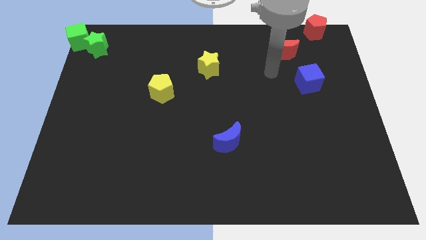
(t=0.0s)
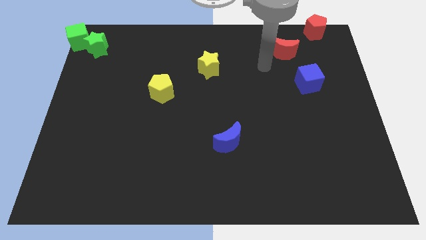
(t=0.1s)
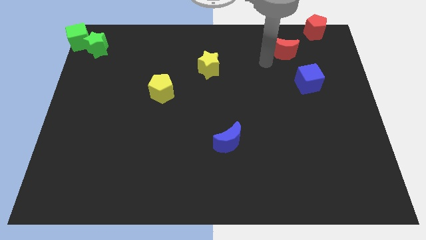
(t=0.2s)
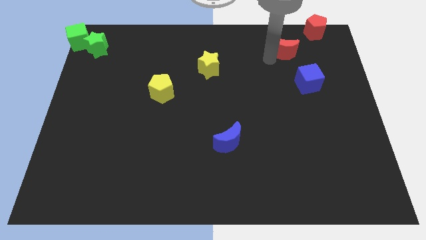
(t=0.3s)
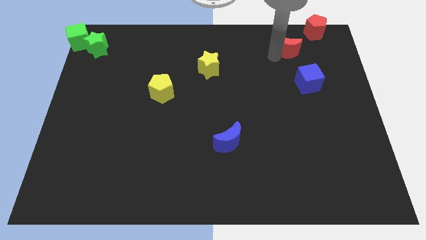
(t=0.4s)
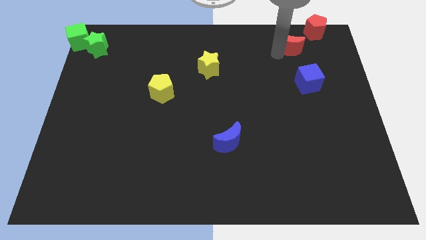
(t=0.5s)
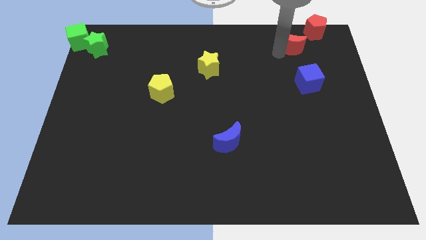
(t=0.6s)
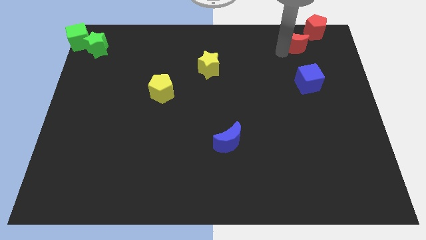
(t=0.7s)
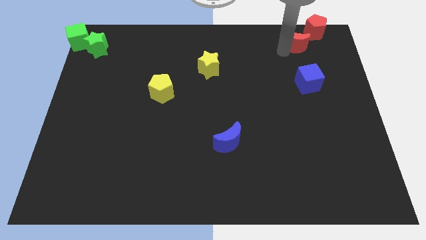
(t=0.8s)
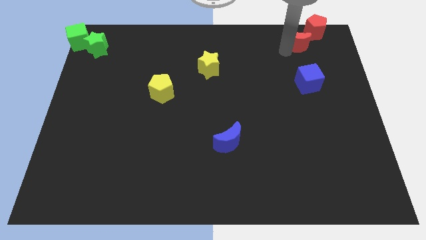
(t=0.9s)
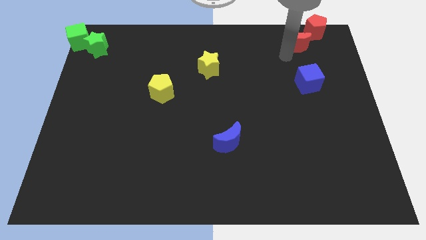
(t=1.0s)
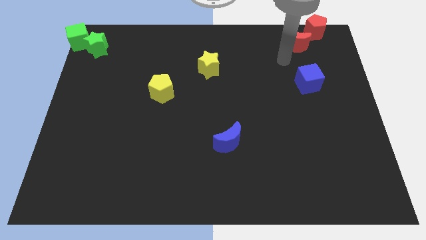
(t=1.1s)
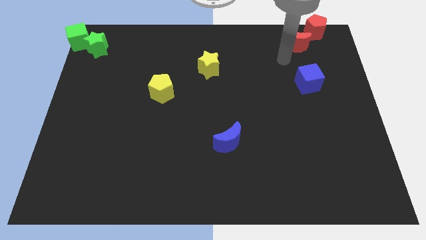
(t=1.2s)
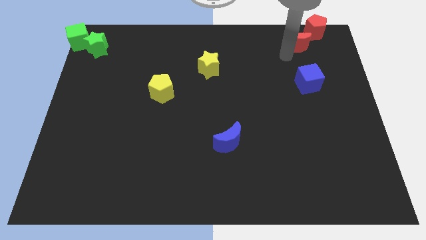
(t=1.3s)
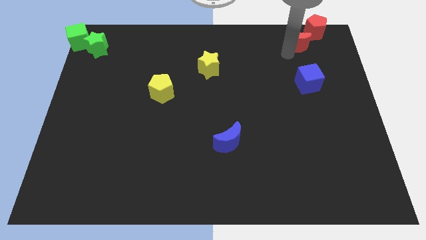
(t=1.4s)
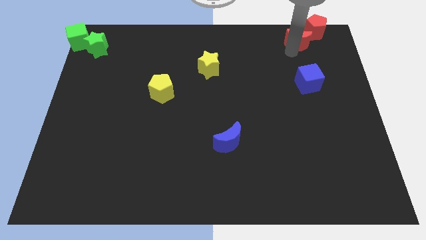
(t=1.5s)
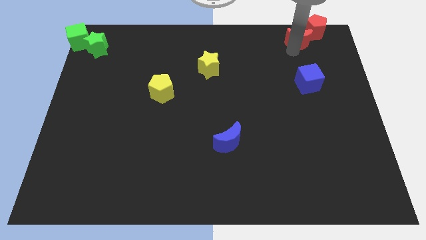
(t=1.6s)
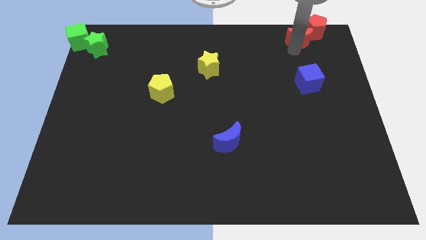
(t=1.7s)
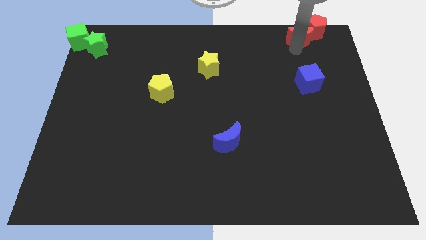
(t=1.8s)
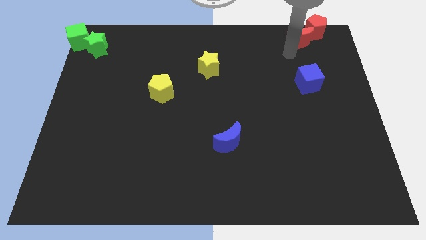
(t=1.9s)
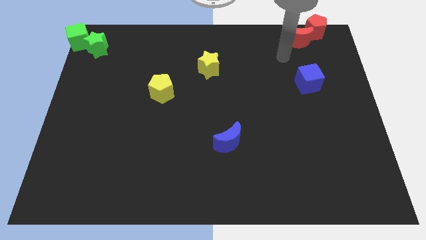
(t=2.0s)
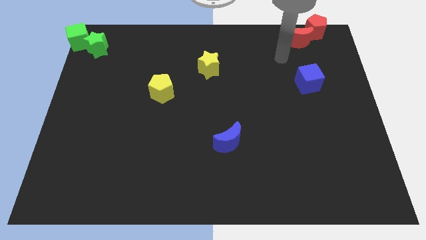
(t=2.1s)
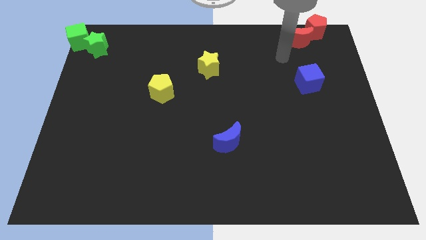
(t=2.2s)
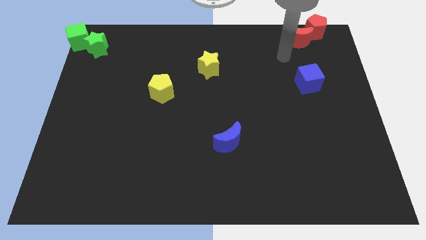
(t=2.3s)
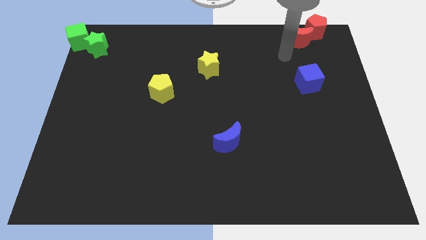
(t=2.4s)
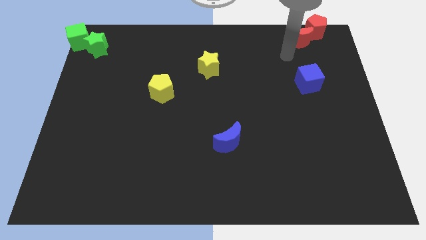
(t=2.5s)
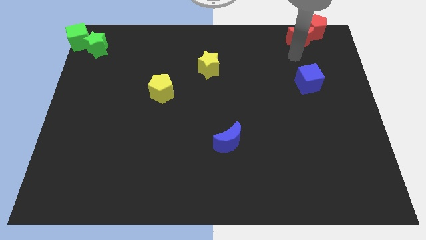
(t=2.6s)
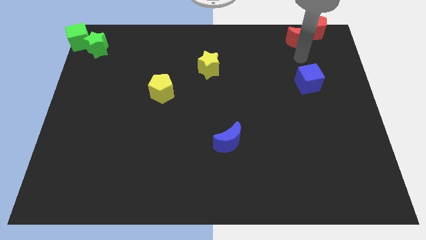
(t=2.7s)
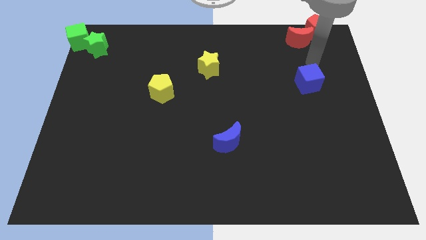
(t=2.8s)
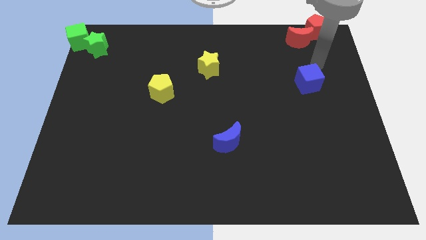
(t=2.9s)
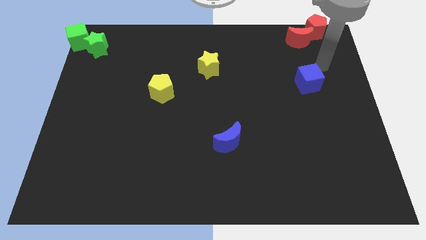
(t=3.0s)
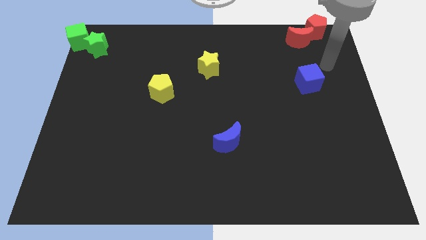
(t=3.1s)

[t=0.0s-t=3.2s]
place the red moon close to the red pentagon

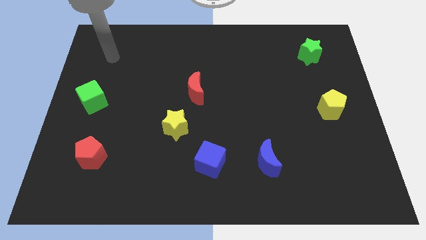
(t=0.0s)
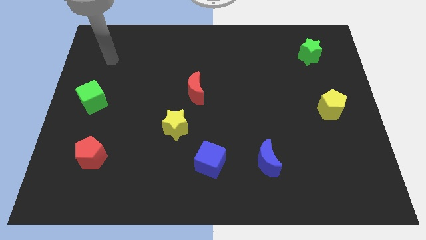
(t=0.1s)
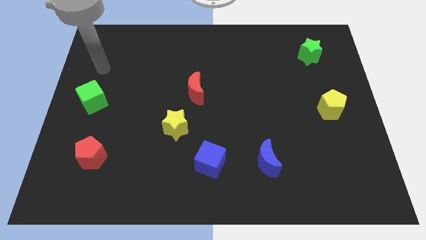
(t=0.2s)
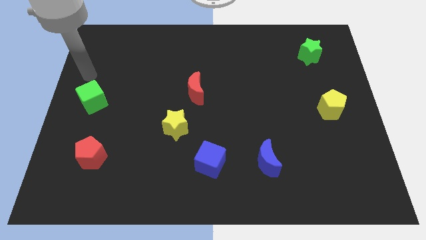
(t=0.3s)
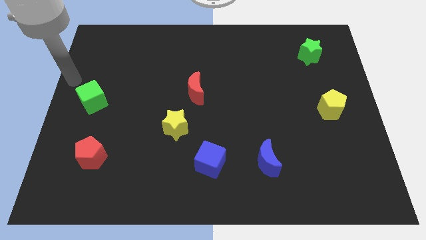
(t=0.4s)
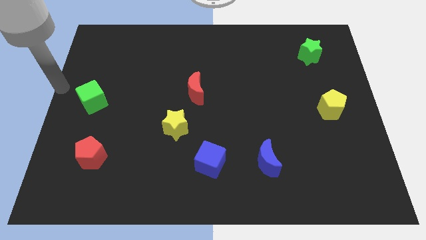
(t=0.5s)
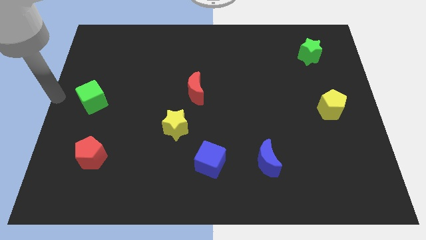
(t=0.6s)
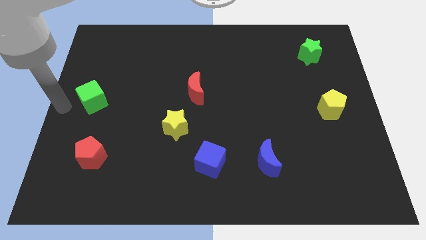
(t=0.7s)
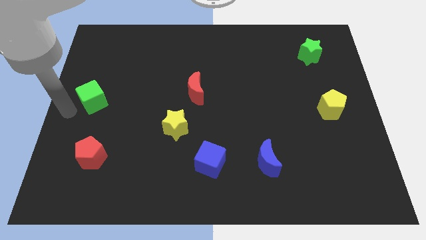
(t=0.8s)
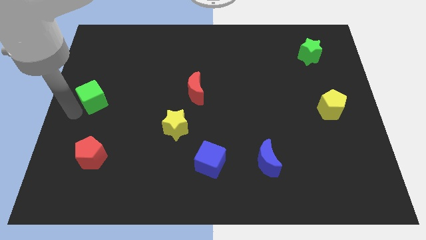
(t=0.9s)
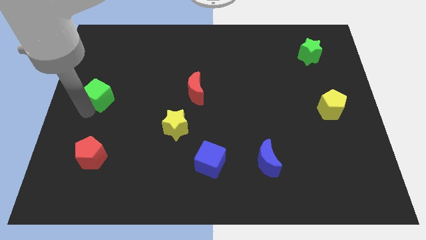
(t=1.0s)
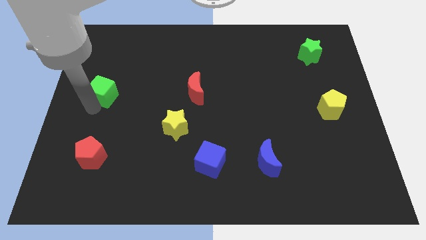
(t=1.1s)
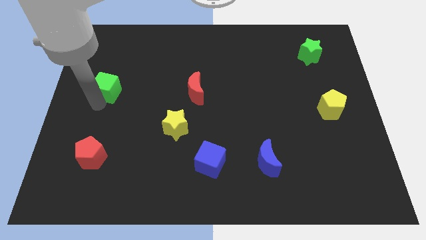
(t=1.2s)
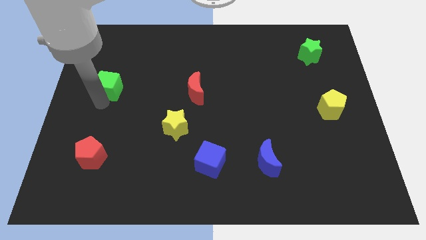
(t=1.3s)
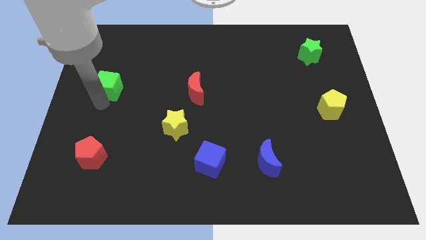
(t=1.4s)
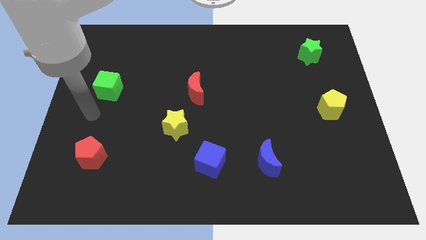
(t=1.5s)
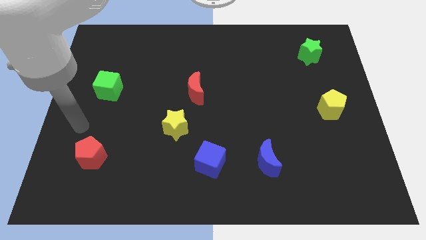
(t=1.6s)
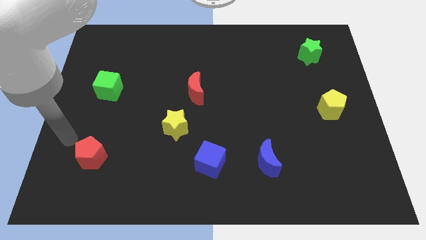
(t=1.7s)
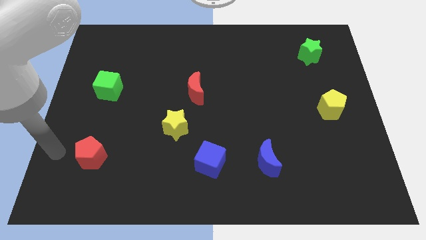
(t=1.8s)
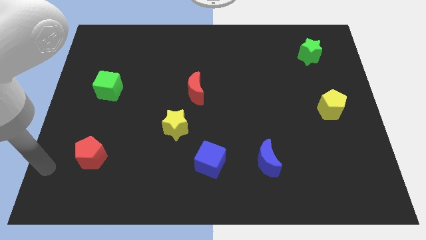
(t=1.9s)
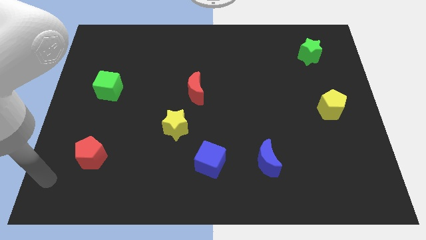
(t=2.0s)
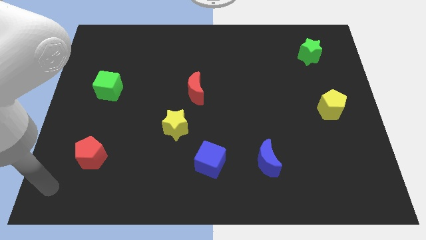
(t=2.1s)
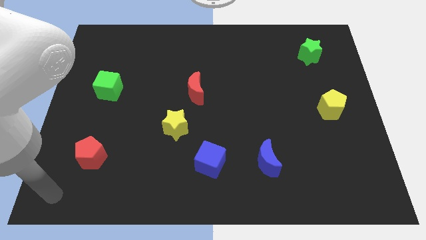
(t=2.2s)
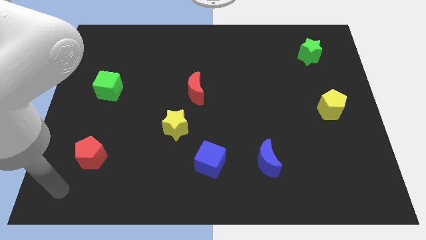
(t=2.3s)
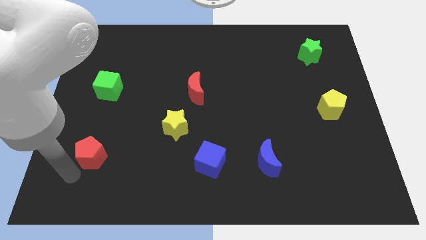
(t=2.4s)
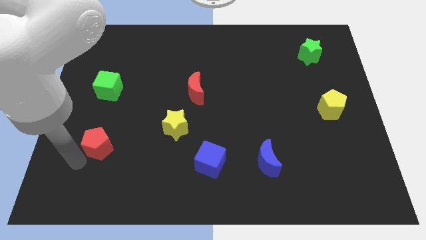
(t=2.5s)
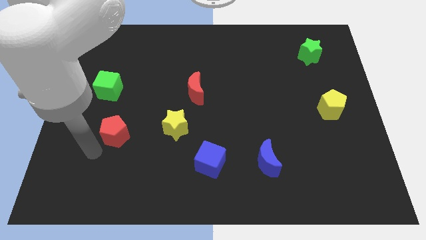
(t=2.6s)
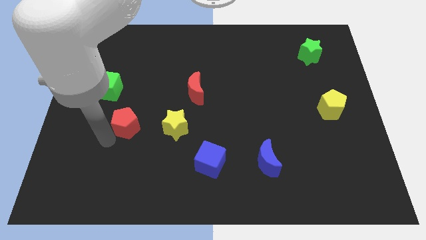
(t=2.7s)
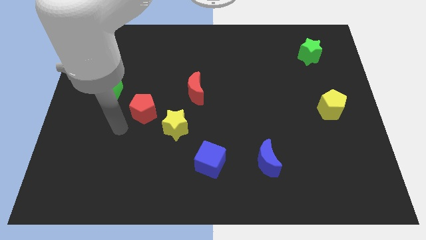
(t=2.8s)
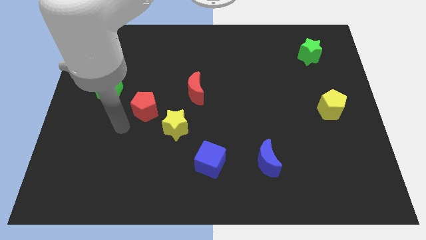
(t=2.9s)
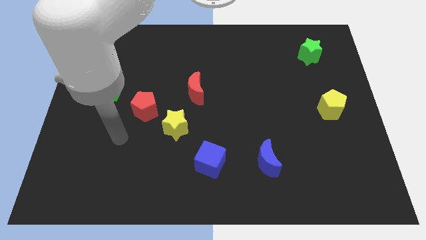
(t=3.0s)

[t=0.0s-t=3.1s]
move the red pentagon diagonally in between the yellow star and the green cube

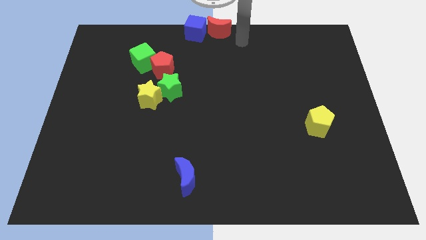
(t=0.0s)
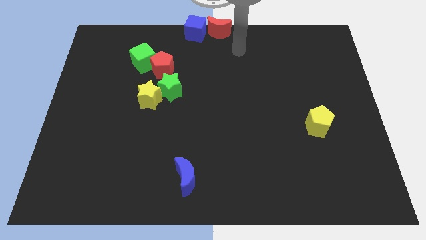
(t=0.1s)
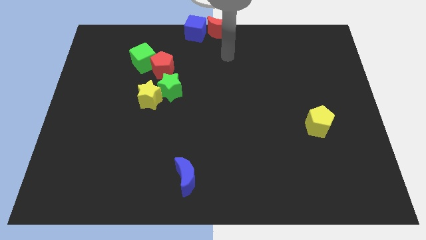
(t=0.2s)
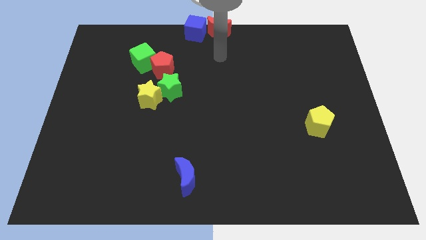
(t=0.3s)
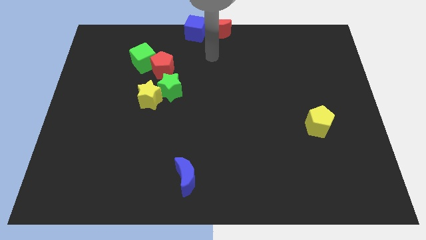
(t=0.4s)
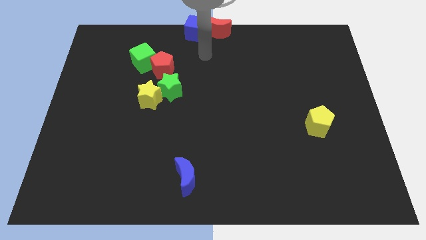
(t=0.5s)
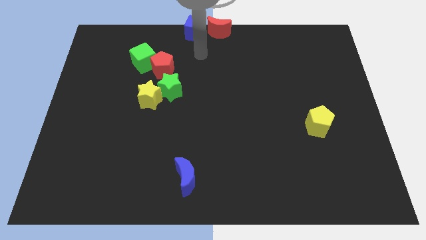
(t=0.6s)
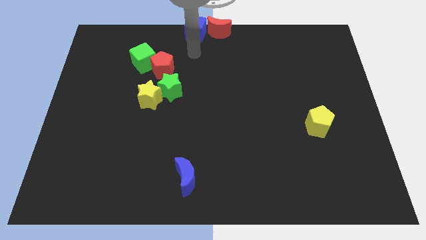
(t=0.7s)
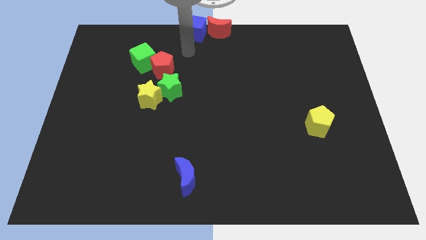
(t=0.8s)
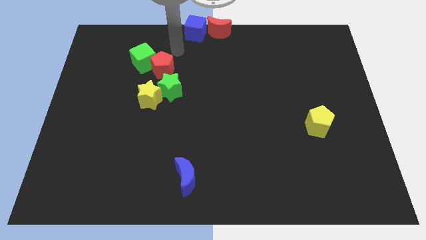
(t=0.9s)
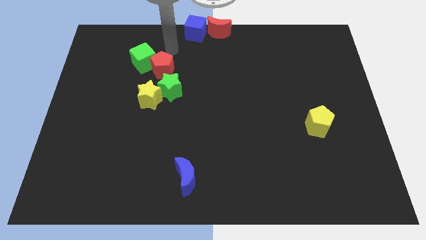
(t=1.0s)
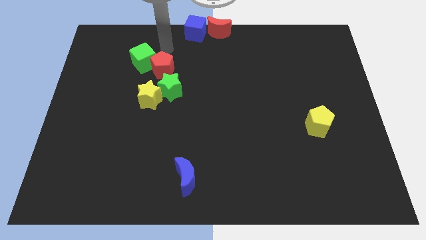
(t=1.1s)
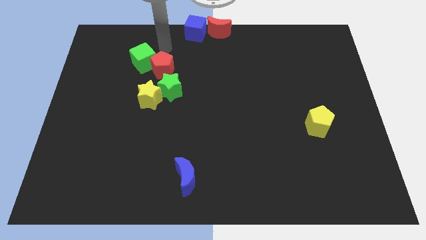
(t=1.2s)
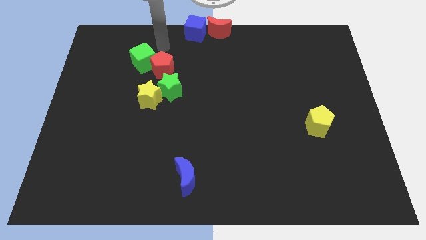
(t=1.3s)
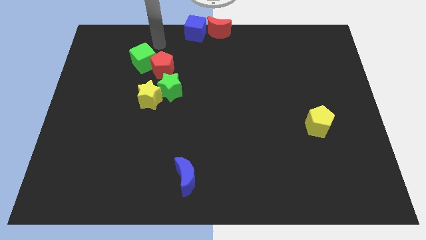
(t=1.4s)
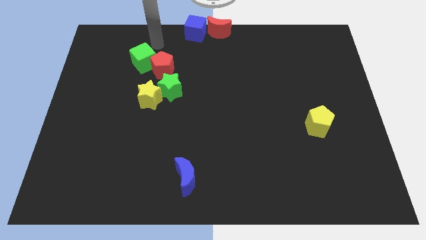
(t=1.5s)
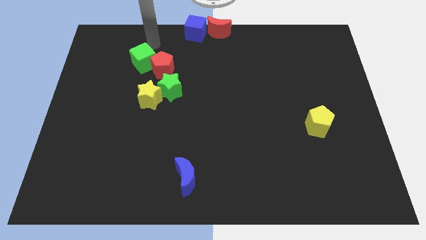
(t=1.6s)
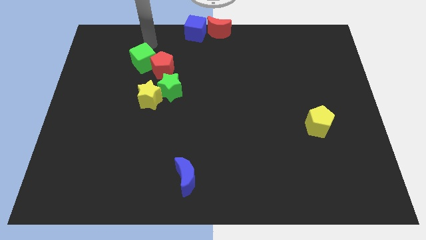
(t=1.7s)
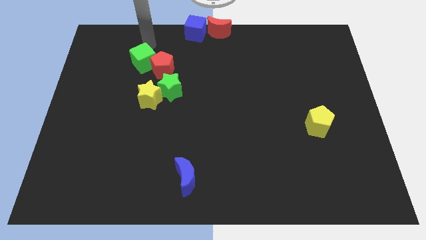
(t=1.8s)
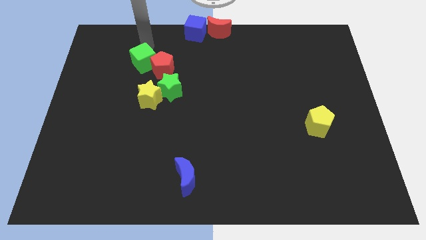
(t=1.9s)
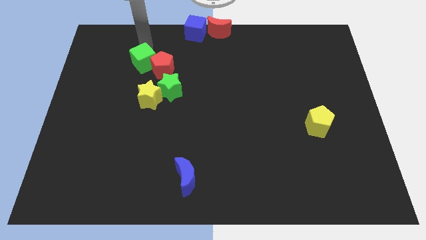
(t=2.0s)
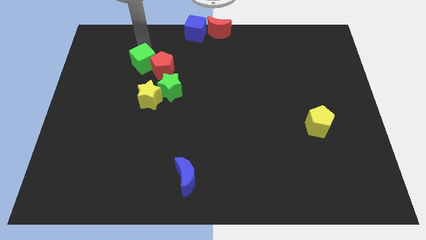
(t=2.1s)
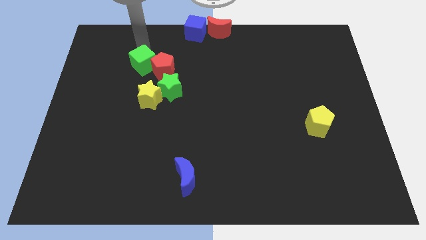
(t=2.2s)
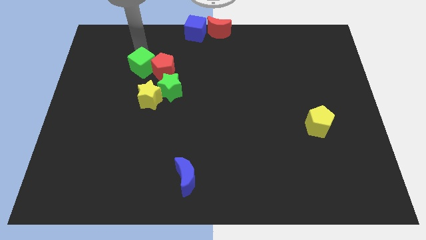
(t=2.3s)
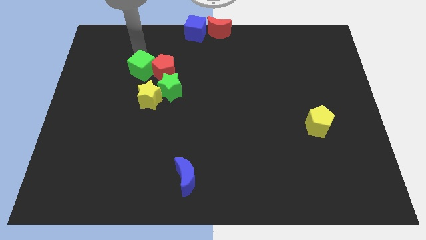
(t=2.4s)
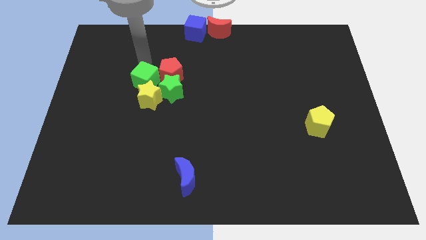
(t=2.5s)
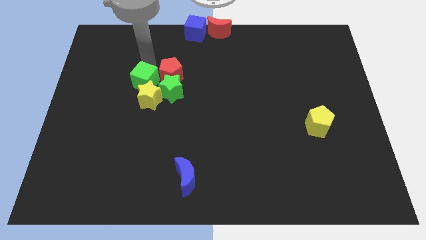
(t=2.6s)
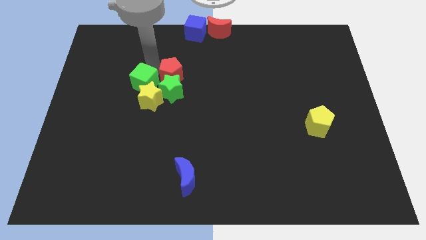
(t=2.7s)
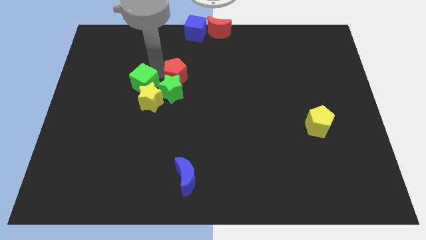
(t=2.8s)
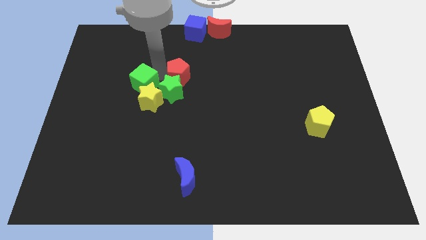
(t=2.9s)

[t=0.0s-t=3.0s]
push the green cube into the yellow star
